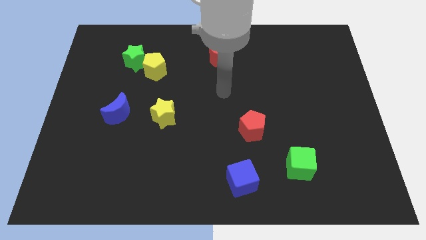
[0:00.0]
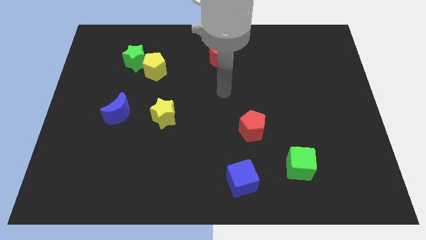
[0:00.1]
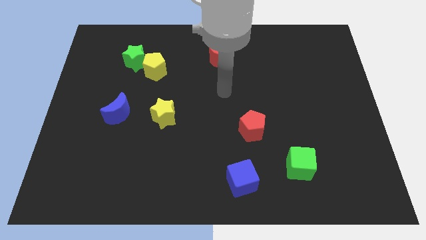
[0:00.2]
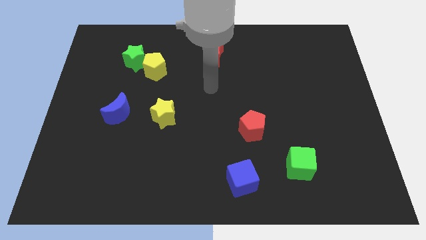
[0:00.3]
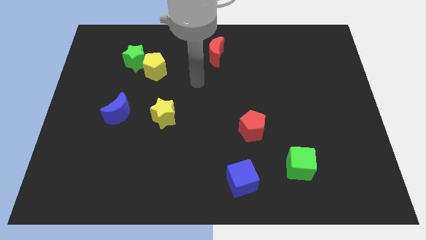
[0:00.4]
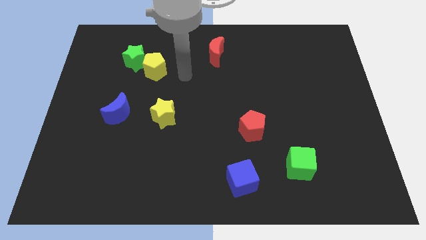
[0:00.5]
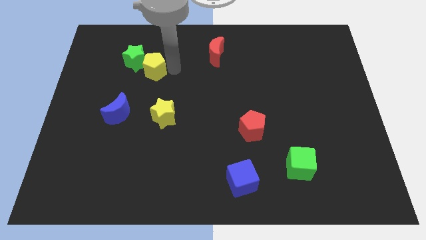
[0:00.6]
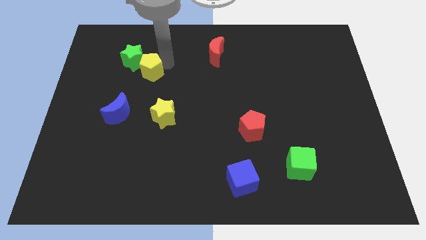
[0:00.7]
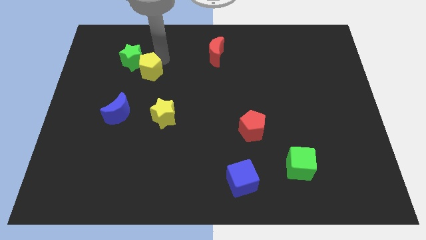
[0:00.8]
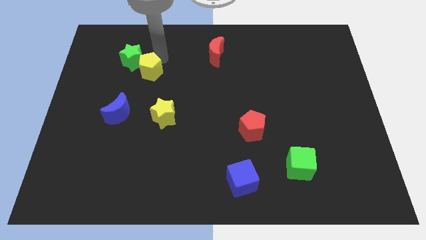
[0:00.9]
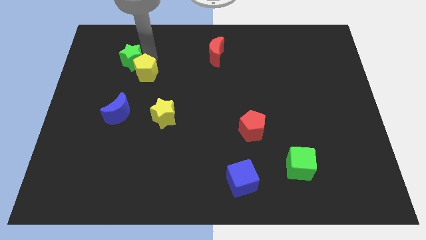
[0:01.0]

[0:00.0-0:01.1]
point your arm at the top of the yellow pentagon

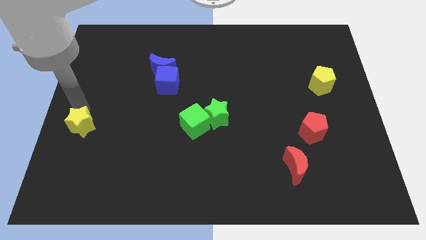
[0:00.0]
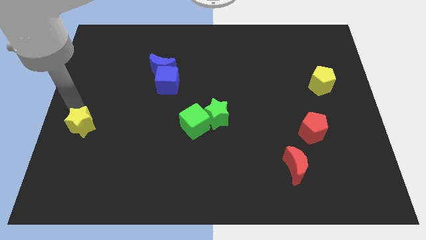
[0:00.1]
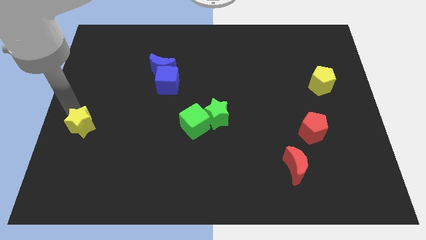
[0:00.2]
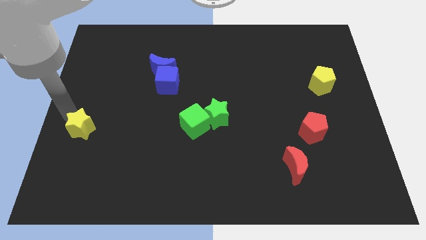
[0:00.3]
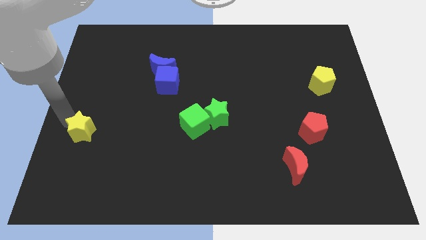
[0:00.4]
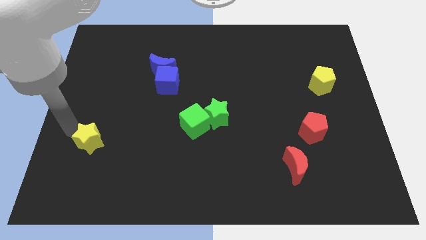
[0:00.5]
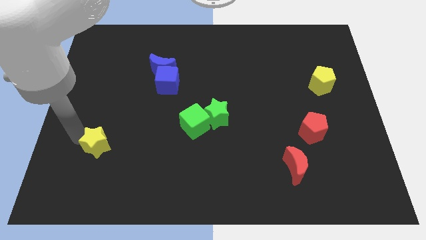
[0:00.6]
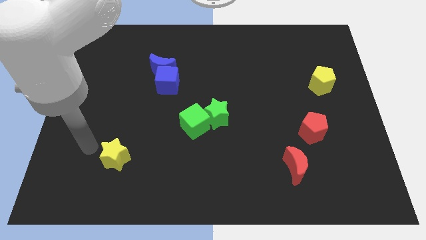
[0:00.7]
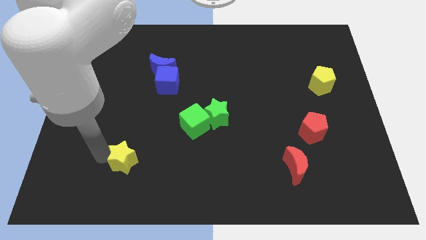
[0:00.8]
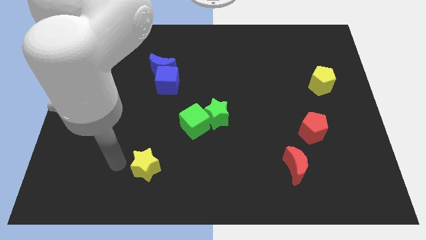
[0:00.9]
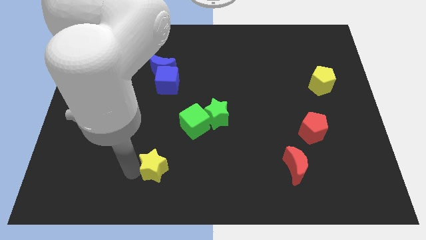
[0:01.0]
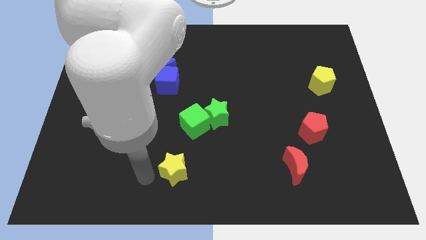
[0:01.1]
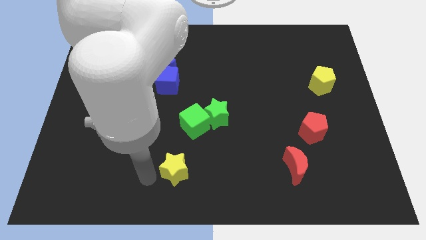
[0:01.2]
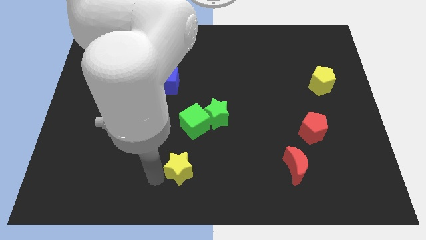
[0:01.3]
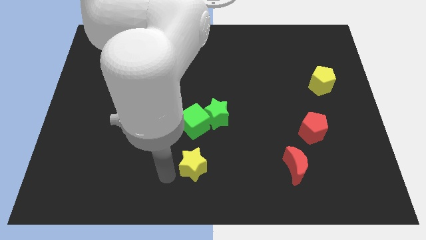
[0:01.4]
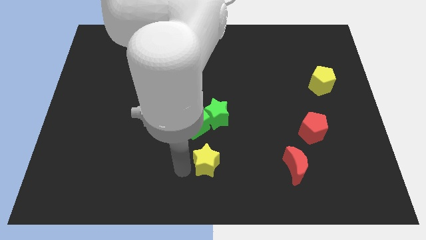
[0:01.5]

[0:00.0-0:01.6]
push the yellow star to the bottom center

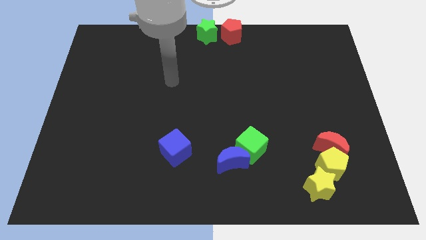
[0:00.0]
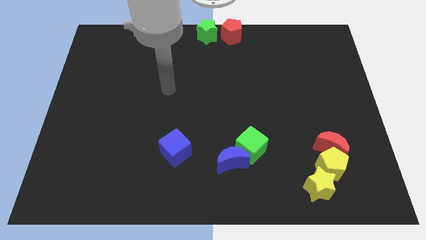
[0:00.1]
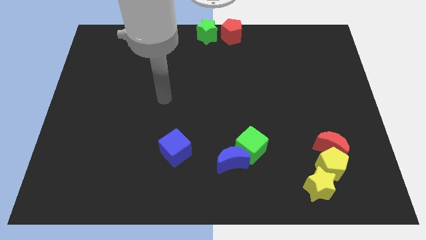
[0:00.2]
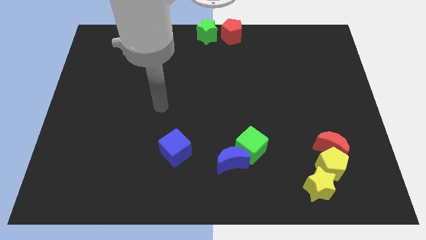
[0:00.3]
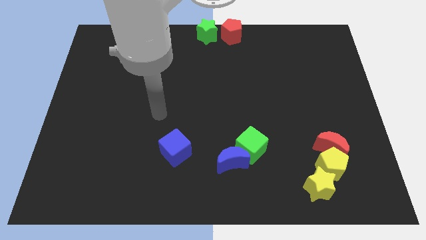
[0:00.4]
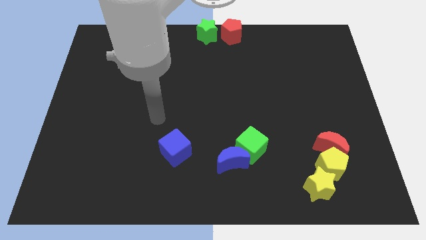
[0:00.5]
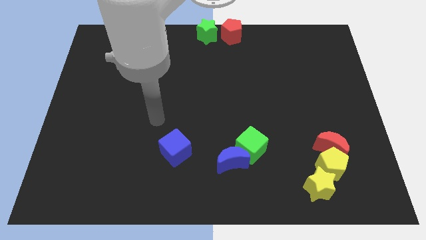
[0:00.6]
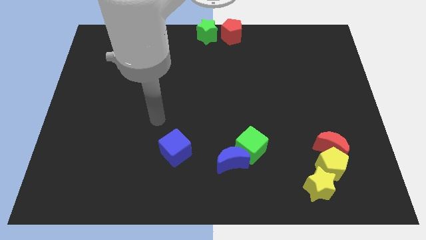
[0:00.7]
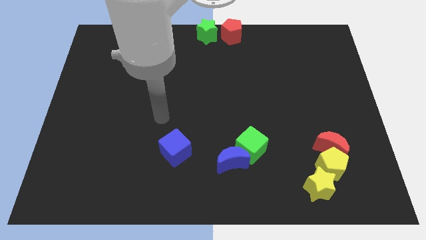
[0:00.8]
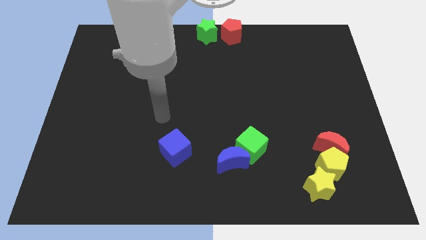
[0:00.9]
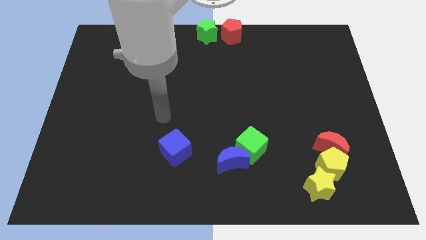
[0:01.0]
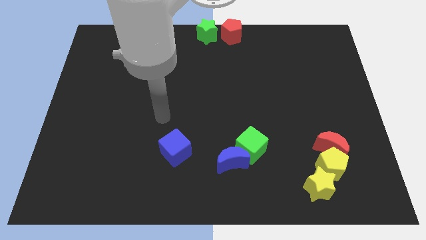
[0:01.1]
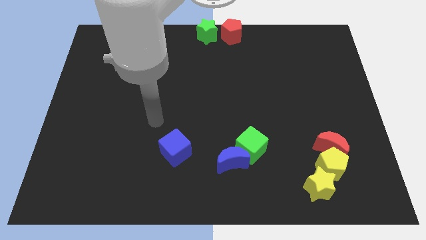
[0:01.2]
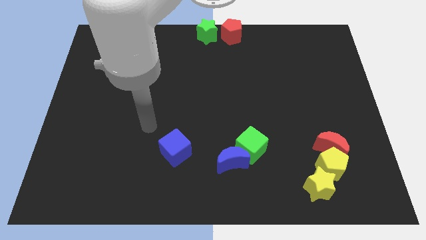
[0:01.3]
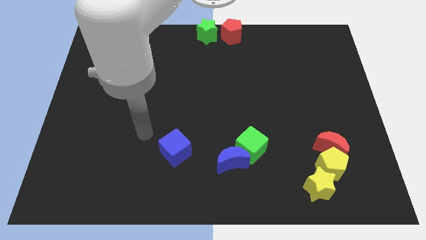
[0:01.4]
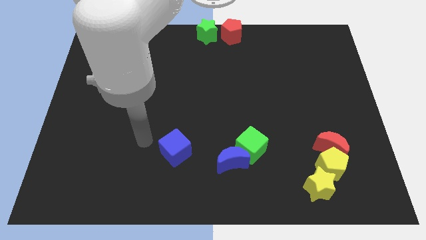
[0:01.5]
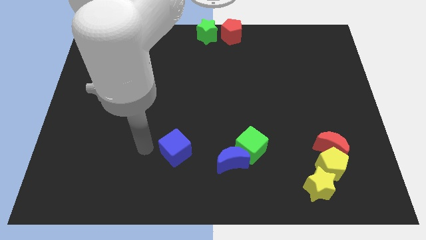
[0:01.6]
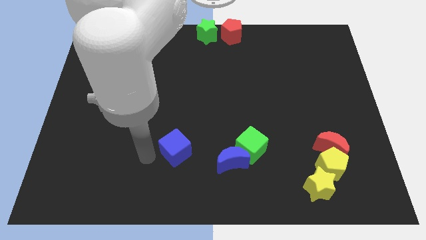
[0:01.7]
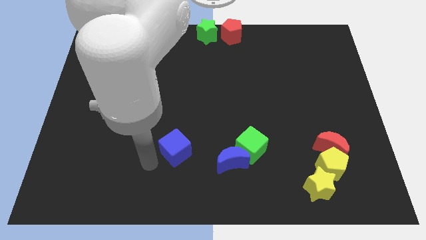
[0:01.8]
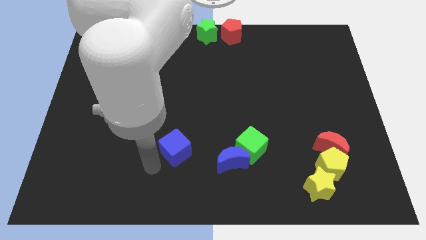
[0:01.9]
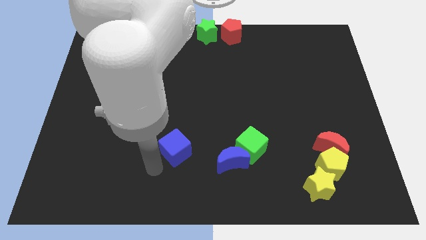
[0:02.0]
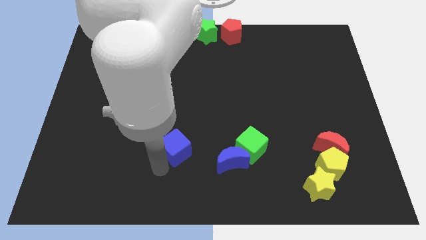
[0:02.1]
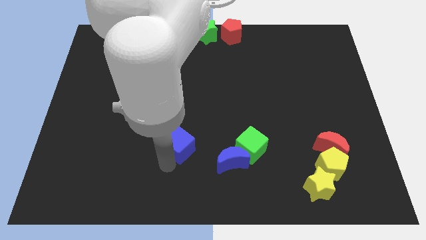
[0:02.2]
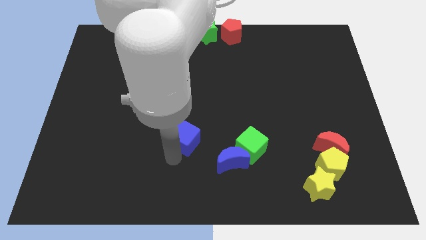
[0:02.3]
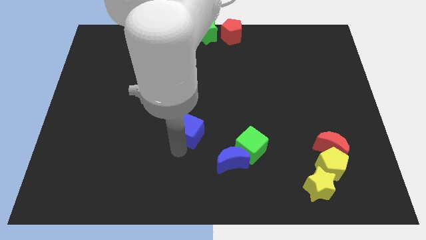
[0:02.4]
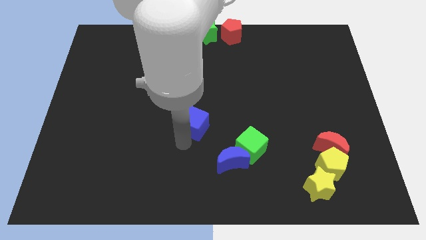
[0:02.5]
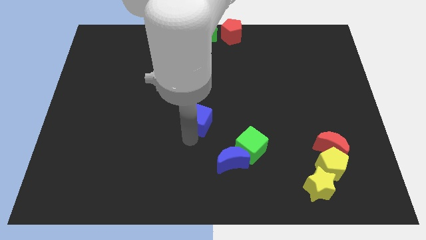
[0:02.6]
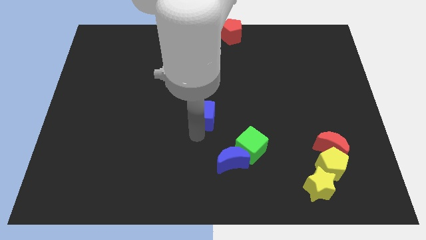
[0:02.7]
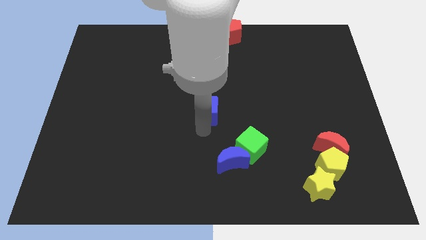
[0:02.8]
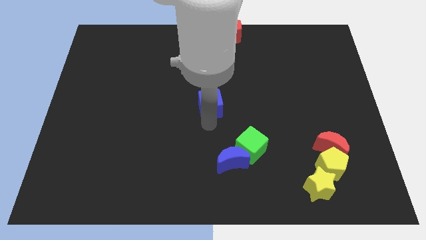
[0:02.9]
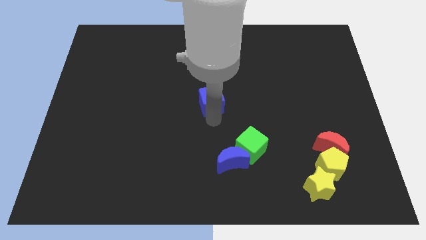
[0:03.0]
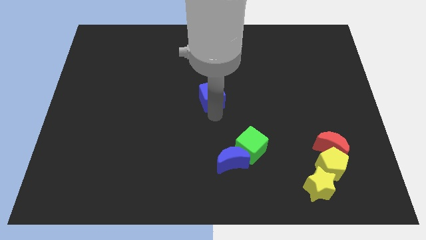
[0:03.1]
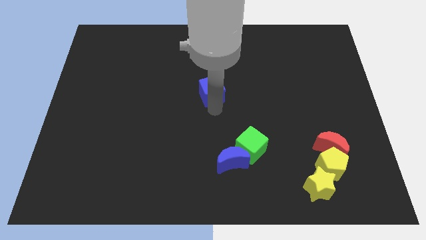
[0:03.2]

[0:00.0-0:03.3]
push the blue cube to the bottom side of the green star

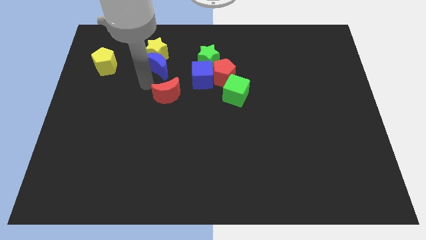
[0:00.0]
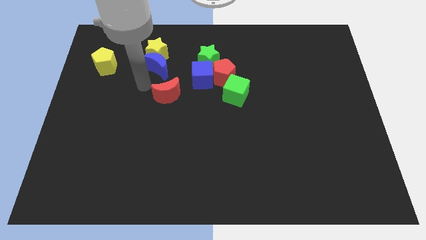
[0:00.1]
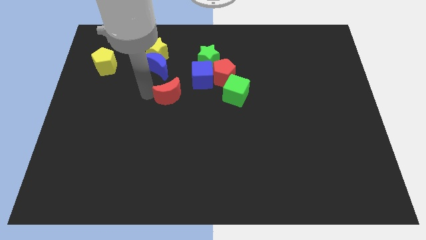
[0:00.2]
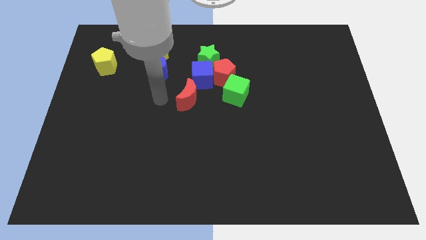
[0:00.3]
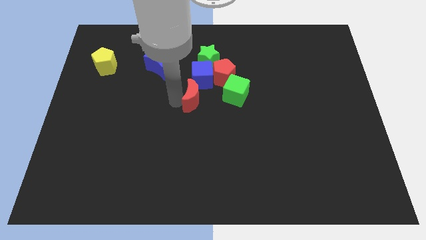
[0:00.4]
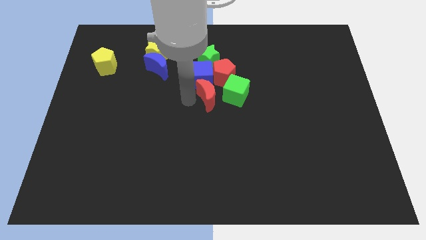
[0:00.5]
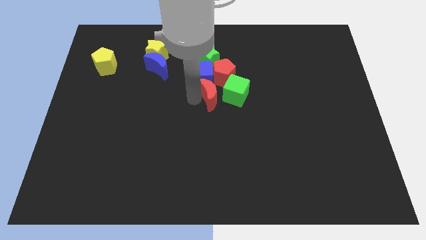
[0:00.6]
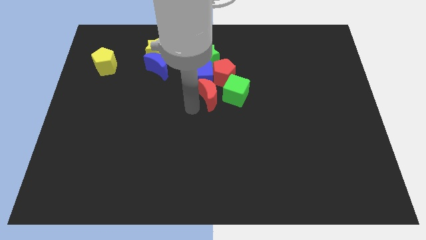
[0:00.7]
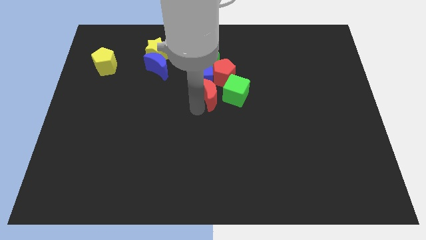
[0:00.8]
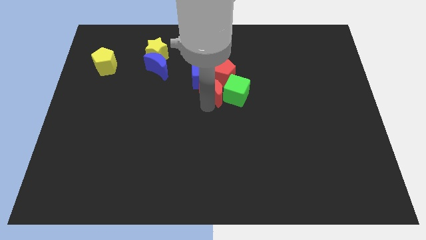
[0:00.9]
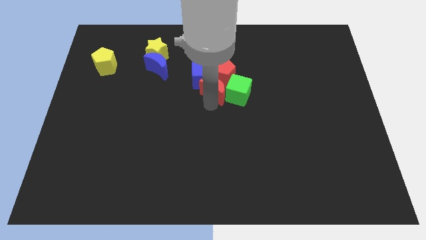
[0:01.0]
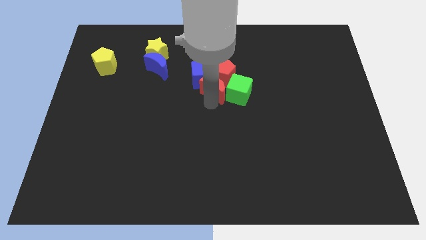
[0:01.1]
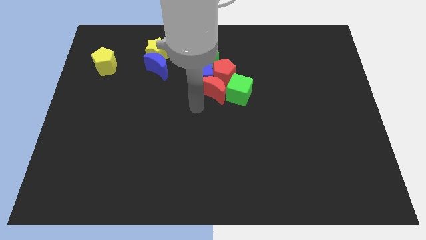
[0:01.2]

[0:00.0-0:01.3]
place the red moon below red pentagon and blue cube

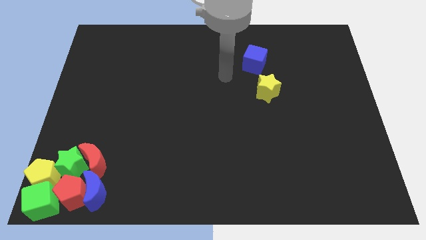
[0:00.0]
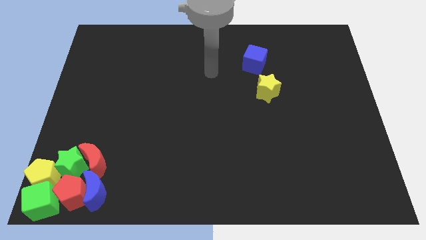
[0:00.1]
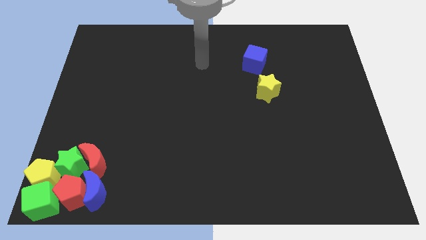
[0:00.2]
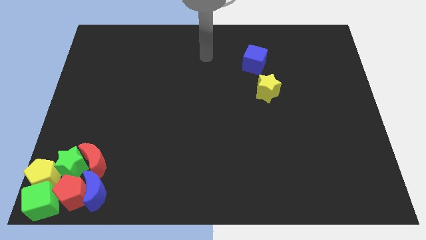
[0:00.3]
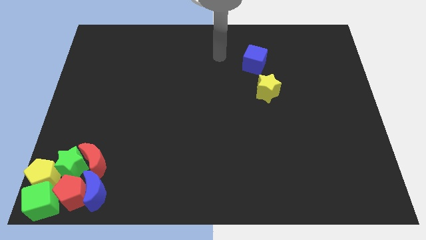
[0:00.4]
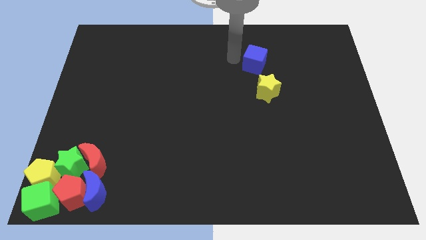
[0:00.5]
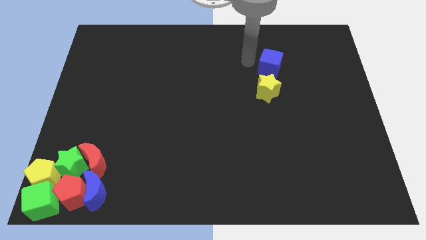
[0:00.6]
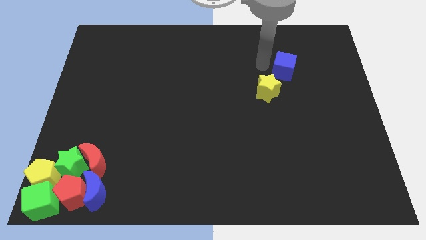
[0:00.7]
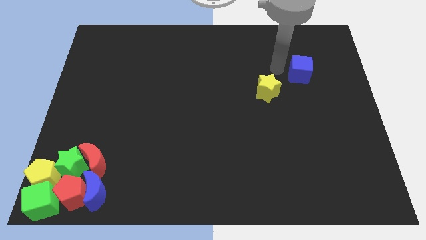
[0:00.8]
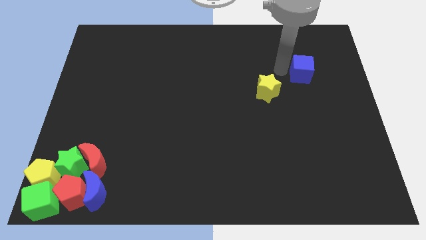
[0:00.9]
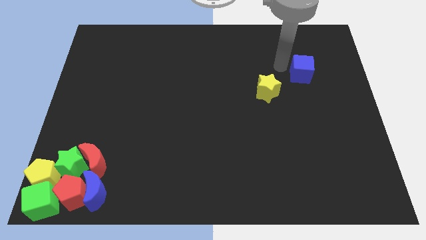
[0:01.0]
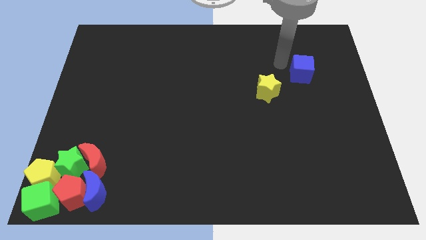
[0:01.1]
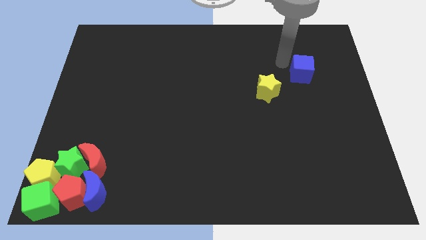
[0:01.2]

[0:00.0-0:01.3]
push blue cube slightly towards right

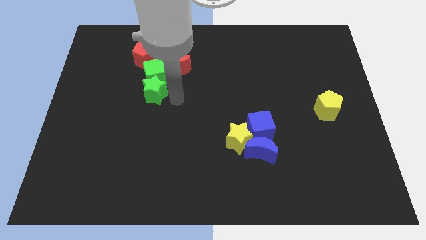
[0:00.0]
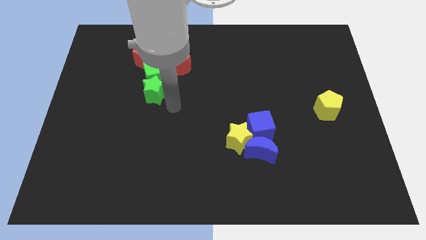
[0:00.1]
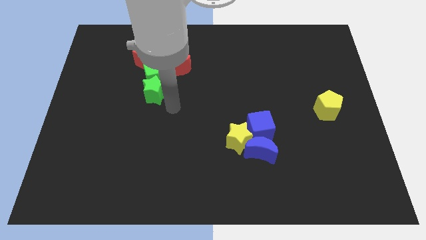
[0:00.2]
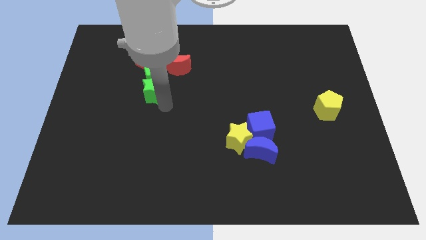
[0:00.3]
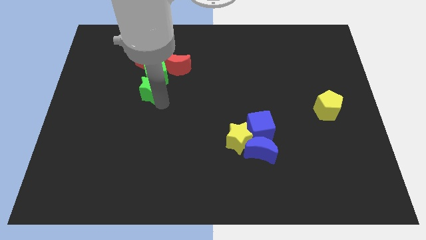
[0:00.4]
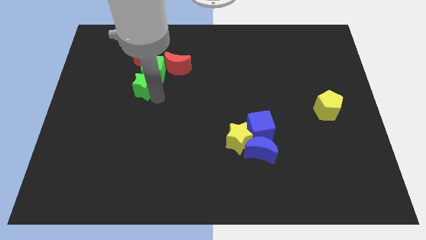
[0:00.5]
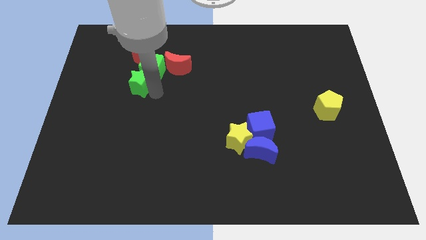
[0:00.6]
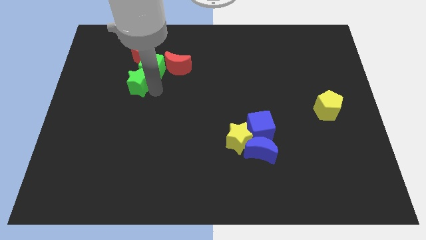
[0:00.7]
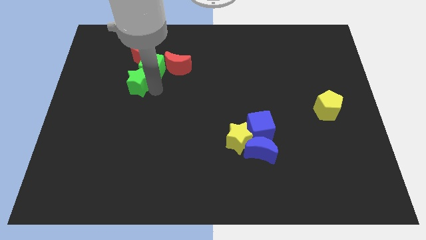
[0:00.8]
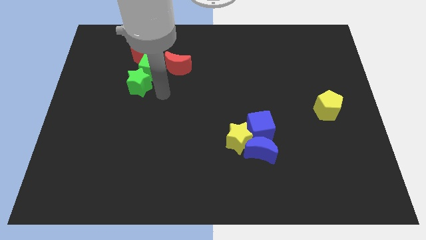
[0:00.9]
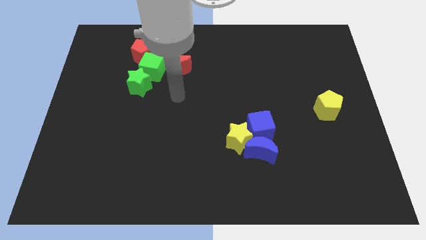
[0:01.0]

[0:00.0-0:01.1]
push the green star into the green cube
